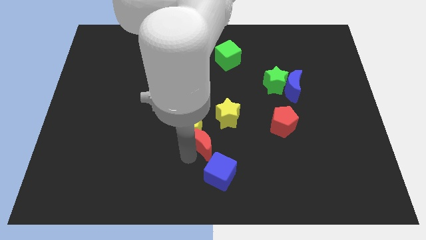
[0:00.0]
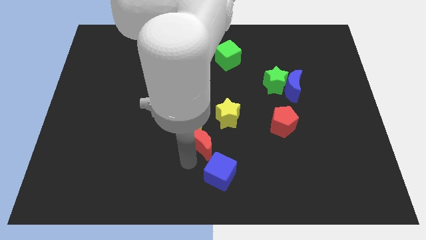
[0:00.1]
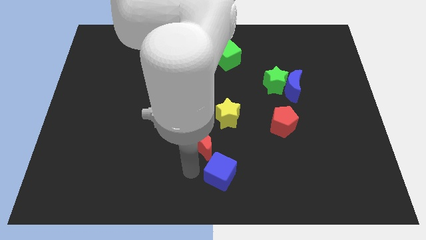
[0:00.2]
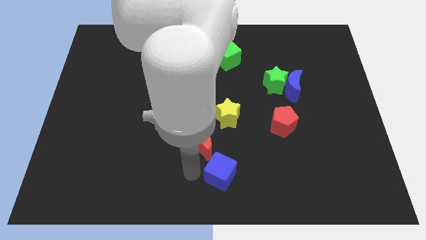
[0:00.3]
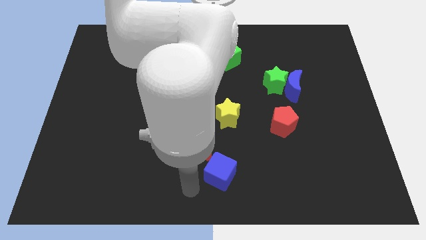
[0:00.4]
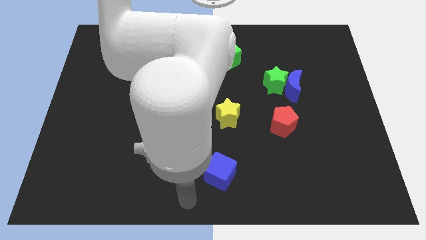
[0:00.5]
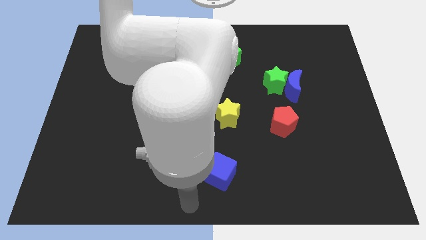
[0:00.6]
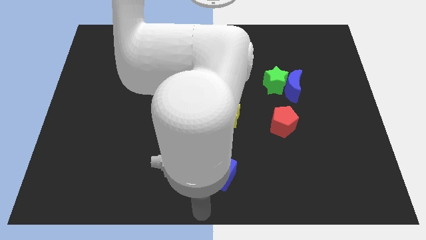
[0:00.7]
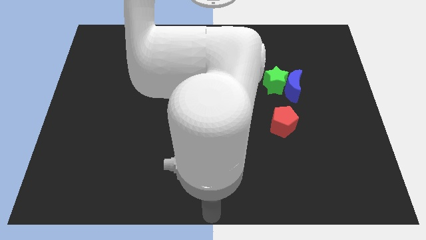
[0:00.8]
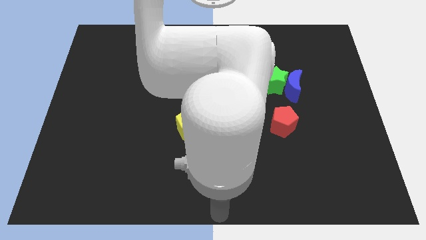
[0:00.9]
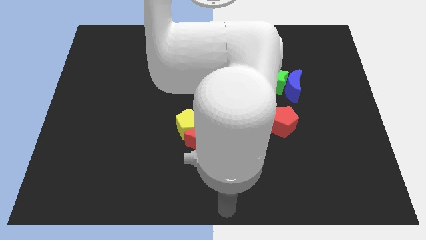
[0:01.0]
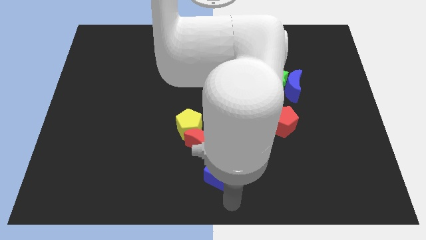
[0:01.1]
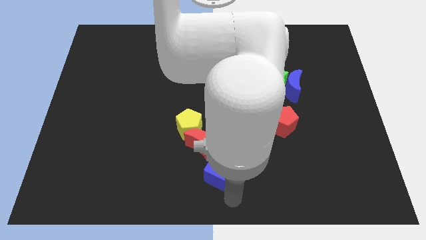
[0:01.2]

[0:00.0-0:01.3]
move the arm down to the blue cube

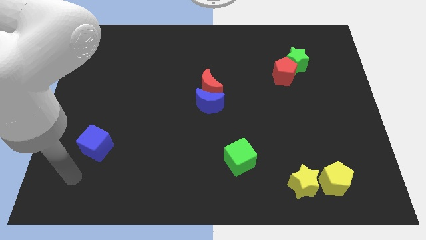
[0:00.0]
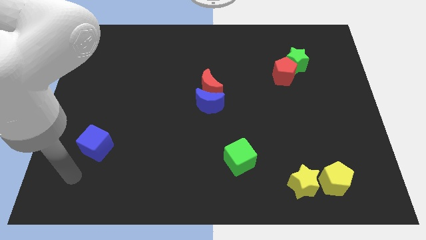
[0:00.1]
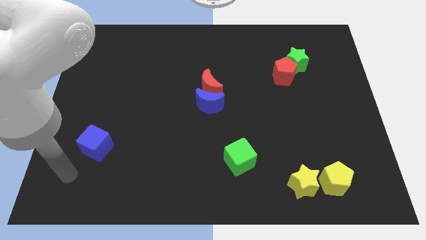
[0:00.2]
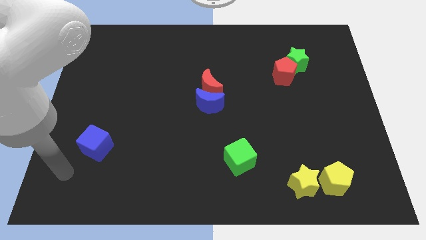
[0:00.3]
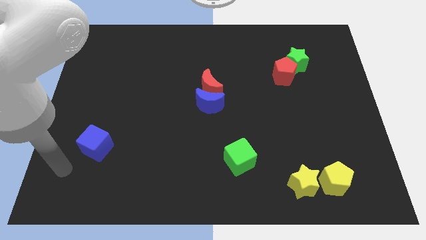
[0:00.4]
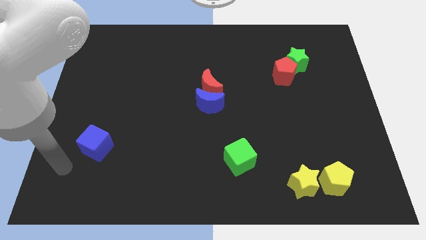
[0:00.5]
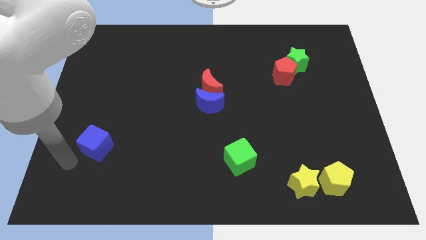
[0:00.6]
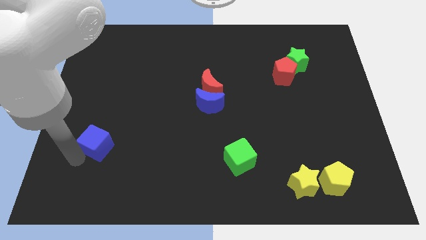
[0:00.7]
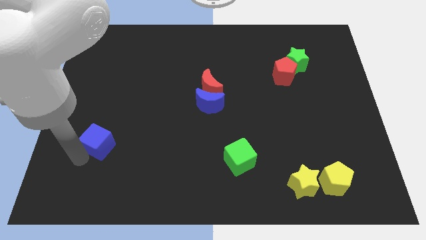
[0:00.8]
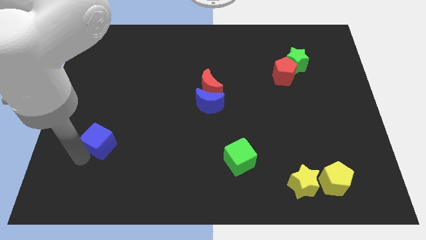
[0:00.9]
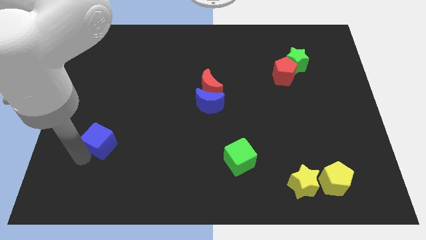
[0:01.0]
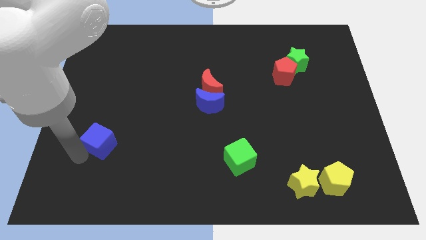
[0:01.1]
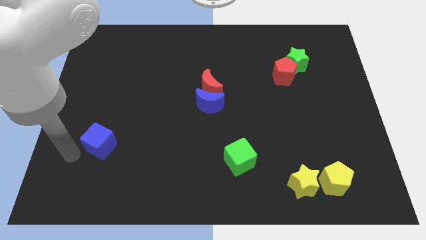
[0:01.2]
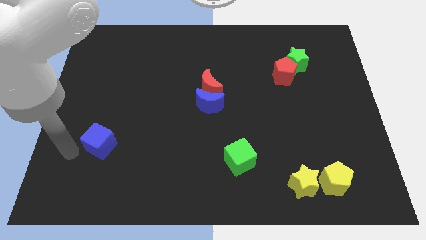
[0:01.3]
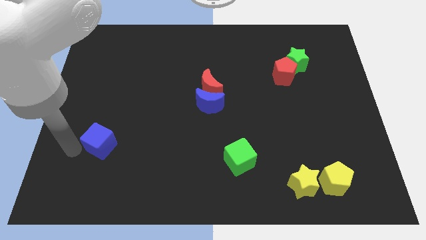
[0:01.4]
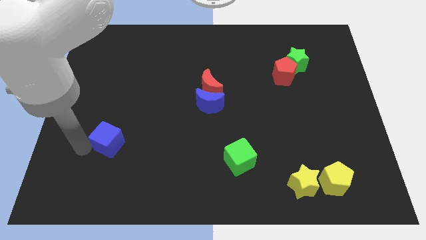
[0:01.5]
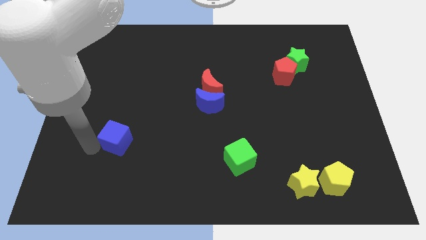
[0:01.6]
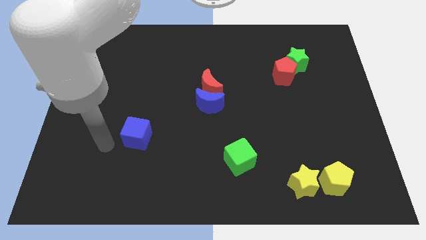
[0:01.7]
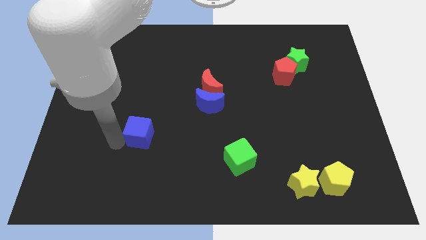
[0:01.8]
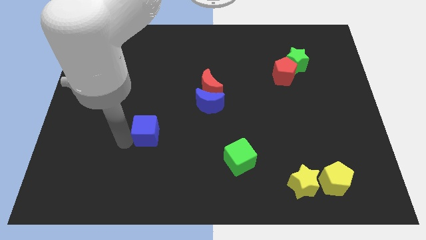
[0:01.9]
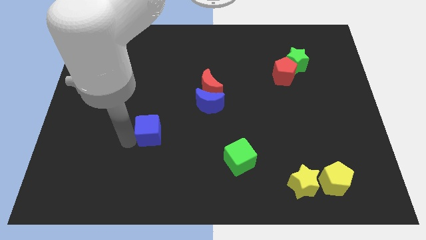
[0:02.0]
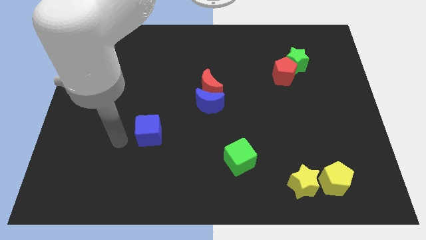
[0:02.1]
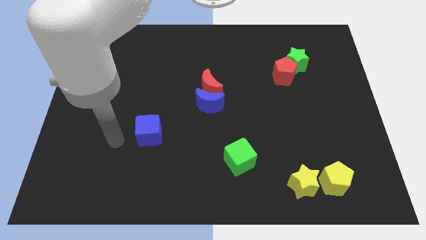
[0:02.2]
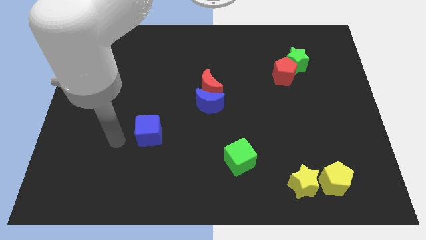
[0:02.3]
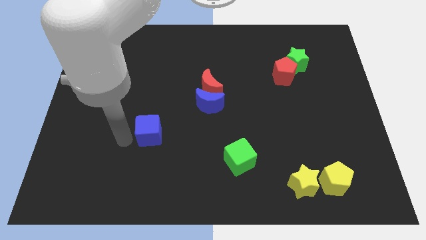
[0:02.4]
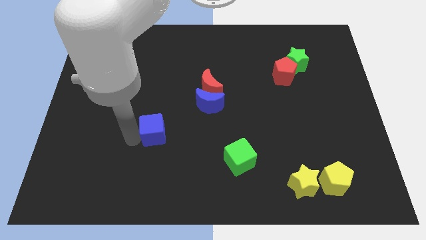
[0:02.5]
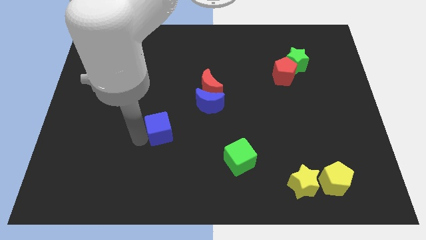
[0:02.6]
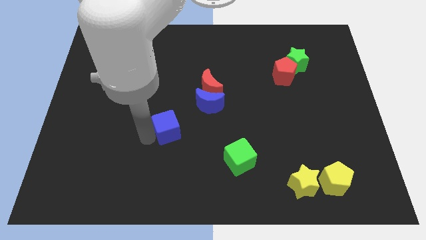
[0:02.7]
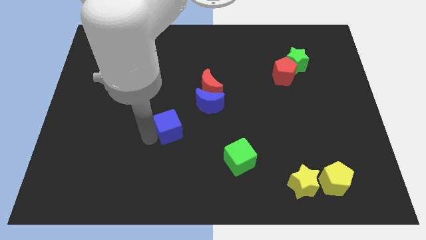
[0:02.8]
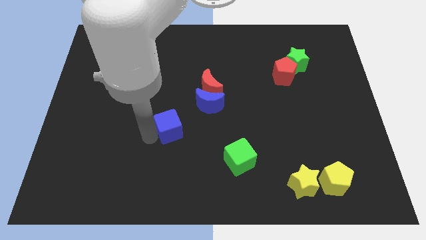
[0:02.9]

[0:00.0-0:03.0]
slightly push the blue cube towards upside

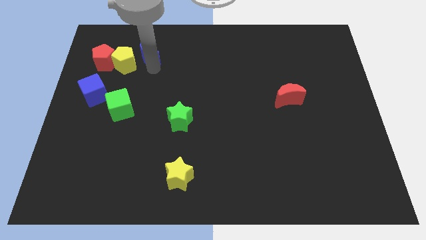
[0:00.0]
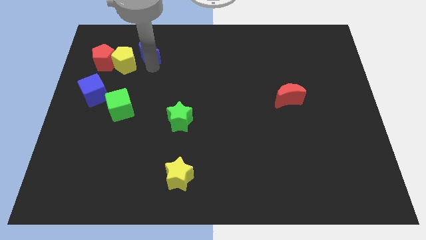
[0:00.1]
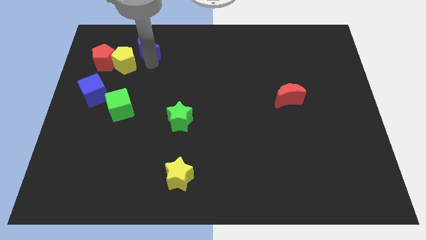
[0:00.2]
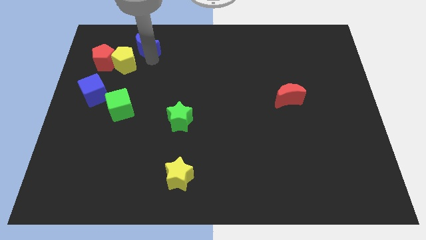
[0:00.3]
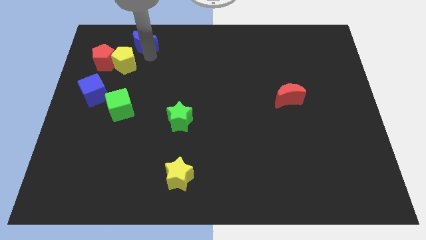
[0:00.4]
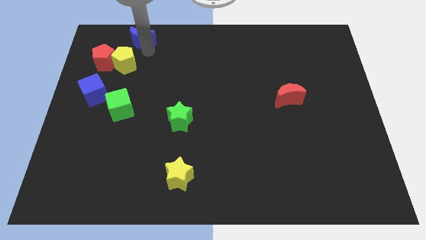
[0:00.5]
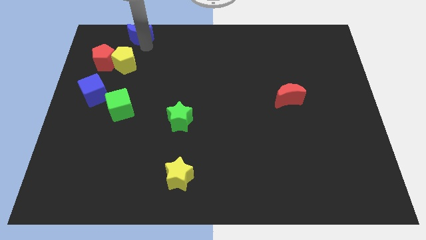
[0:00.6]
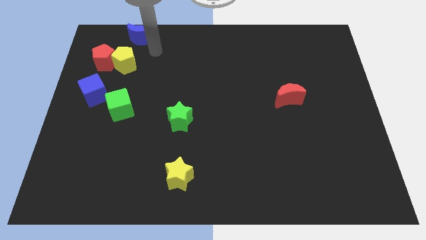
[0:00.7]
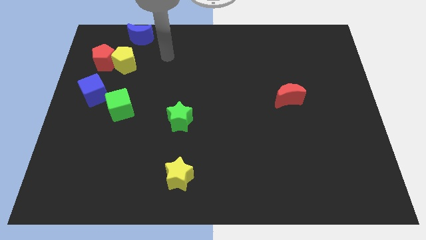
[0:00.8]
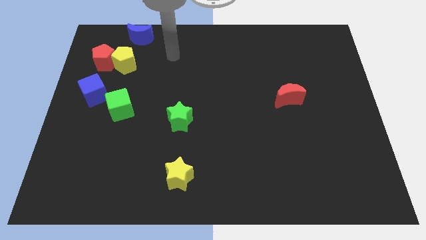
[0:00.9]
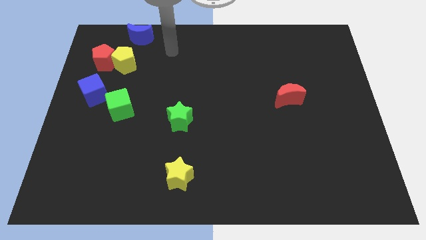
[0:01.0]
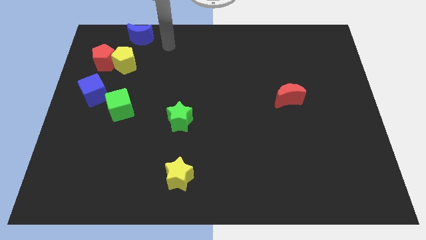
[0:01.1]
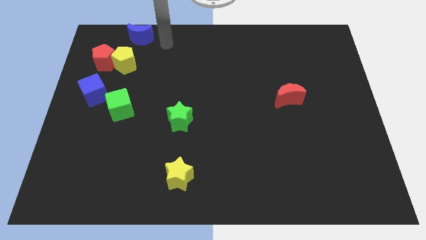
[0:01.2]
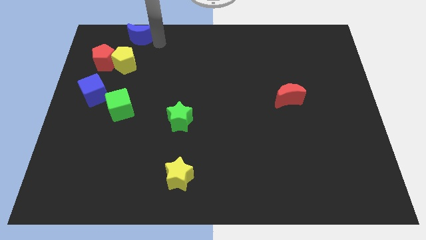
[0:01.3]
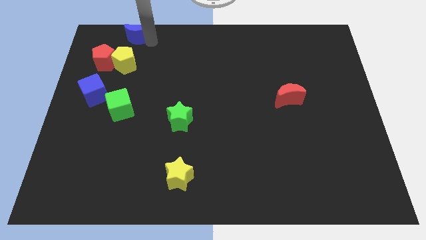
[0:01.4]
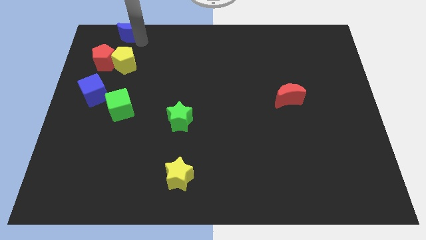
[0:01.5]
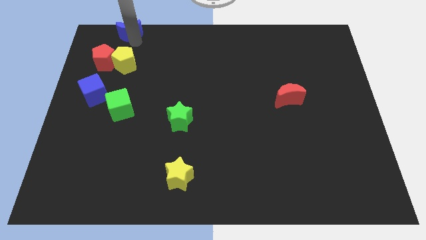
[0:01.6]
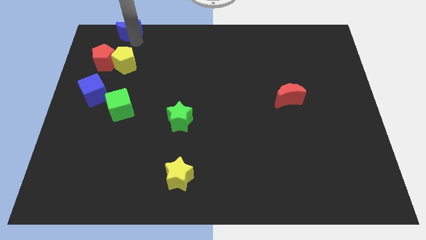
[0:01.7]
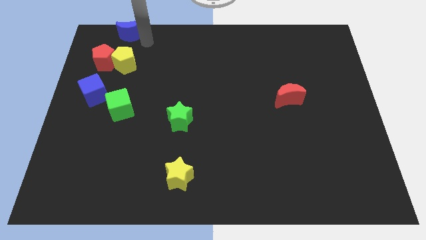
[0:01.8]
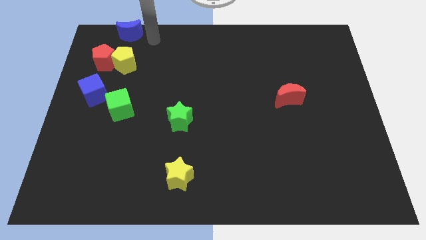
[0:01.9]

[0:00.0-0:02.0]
place the blue moon above the yellow pentagon

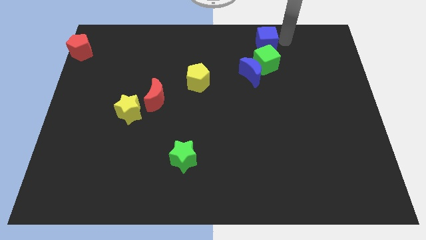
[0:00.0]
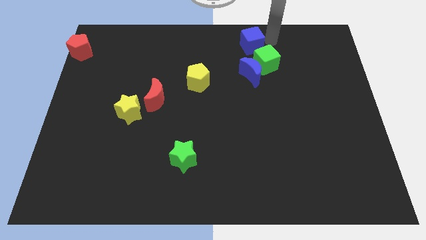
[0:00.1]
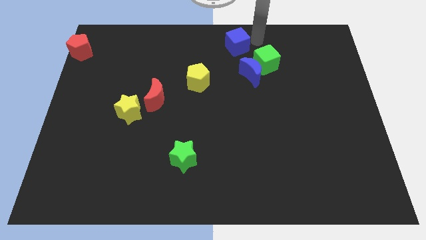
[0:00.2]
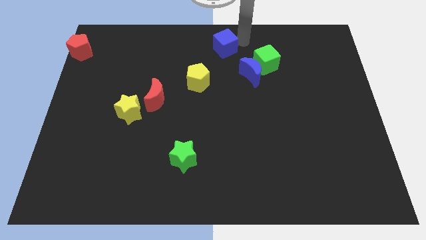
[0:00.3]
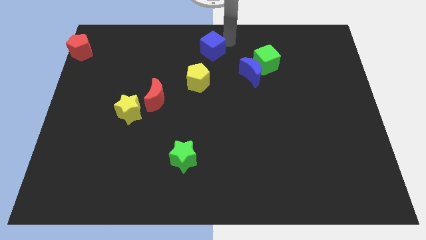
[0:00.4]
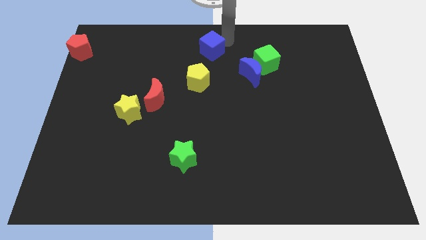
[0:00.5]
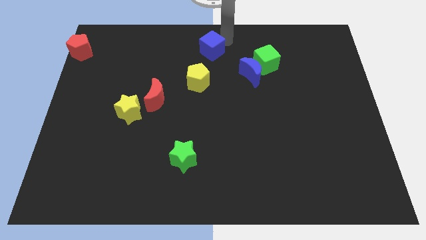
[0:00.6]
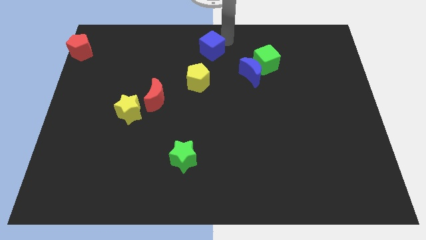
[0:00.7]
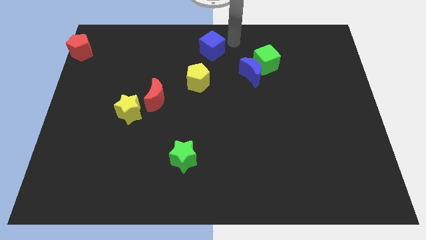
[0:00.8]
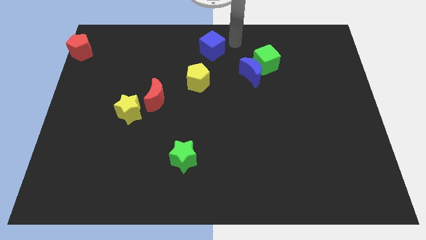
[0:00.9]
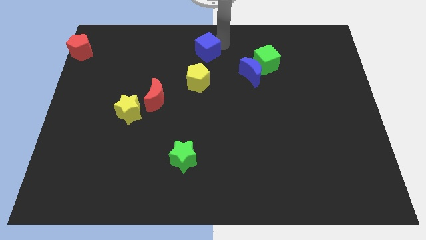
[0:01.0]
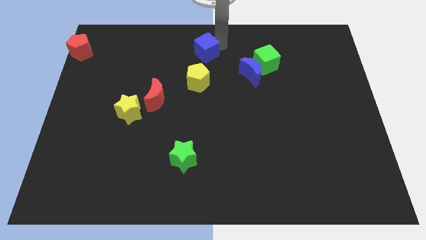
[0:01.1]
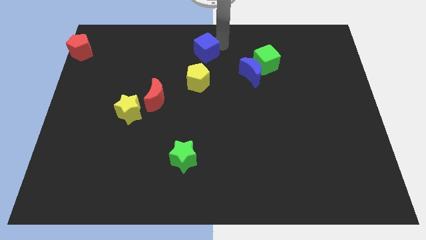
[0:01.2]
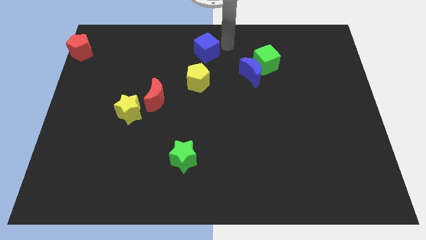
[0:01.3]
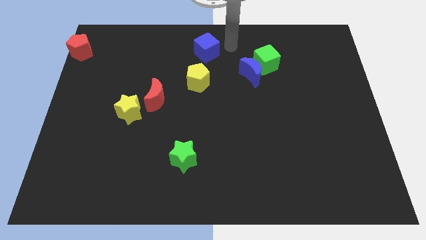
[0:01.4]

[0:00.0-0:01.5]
place the blue cube above the yellow pentagon

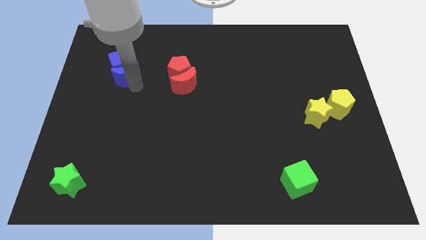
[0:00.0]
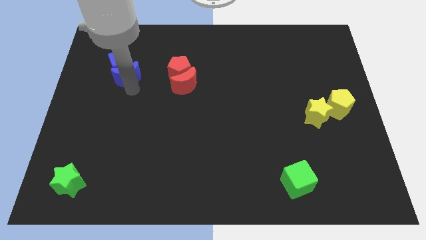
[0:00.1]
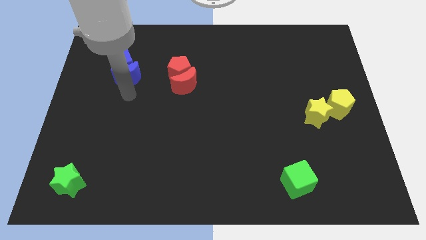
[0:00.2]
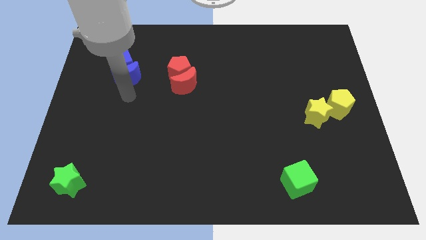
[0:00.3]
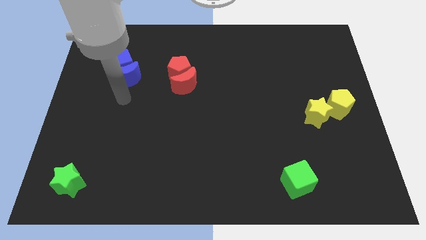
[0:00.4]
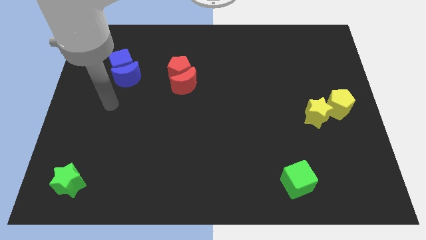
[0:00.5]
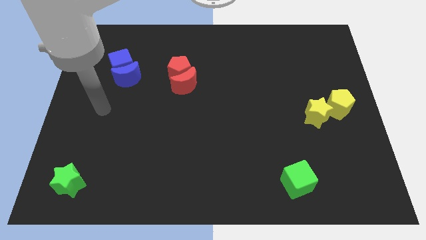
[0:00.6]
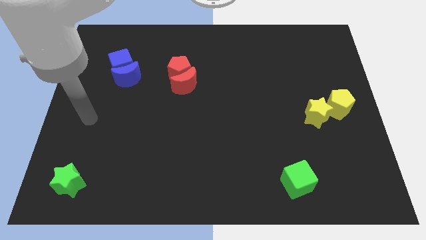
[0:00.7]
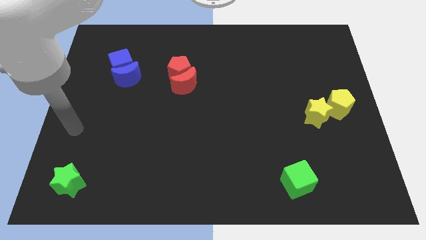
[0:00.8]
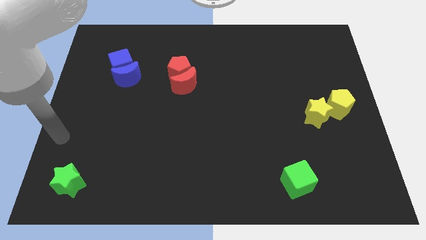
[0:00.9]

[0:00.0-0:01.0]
move the arm away from blue cube

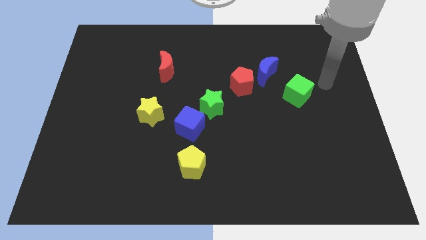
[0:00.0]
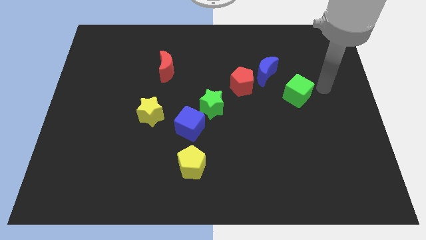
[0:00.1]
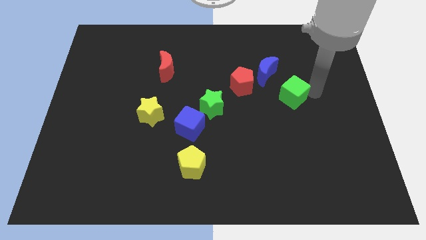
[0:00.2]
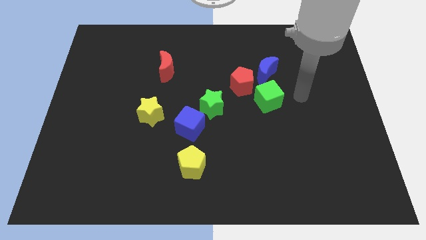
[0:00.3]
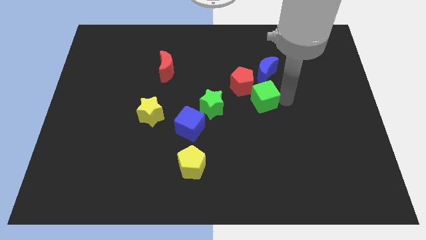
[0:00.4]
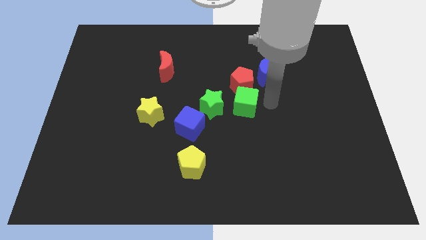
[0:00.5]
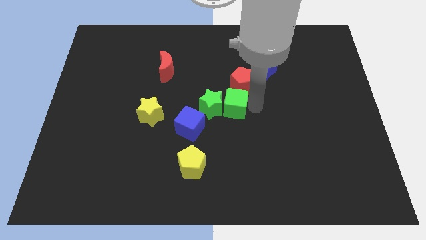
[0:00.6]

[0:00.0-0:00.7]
place green cube to the bottom of red pentagon
